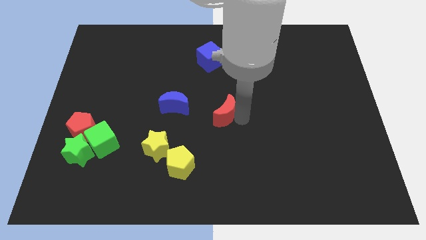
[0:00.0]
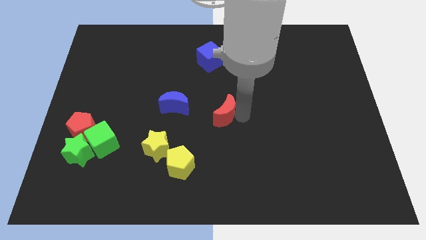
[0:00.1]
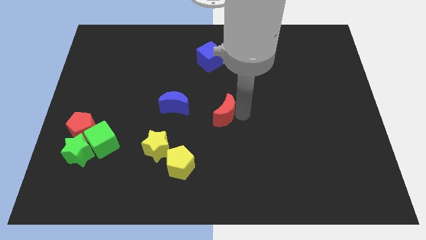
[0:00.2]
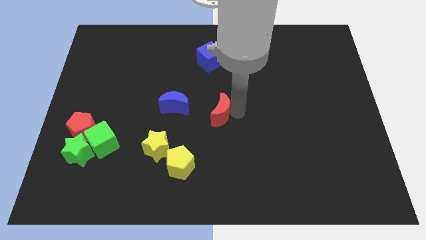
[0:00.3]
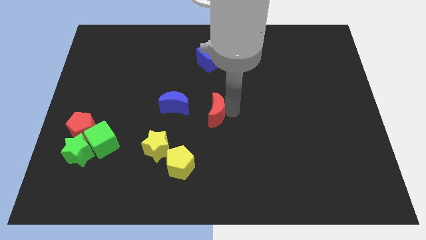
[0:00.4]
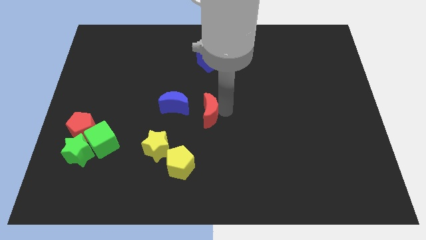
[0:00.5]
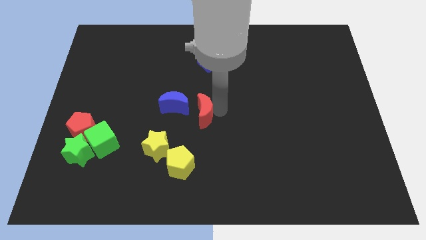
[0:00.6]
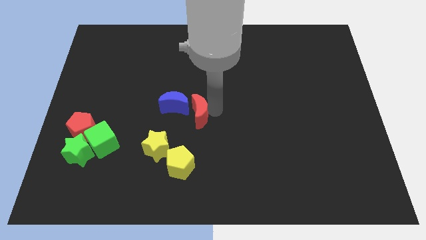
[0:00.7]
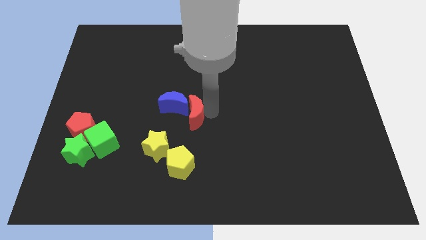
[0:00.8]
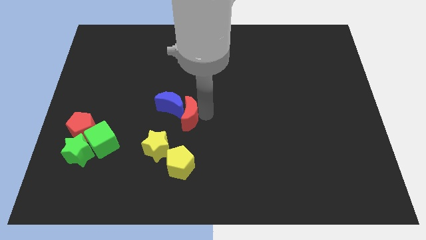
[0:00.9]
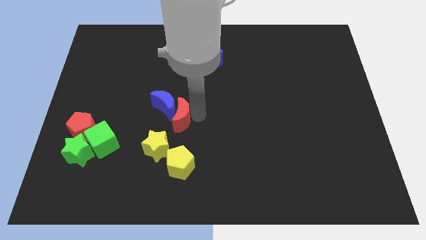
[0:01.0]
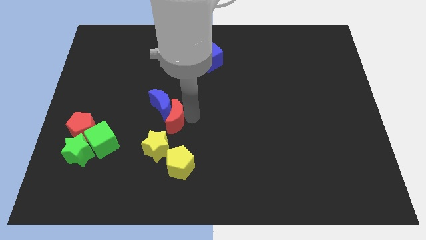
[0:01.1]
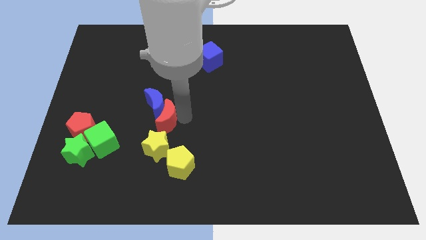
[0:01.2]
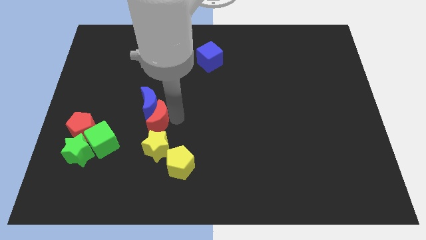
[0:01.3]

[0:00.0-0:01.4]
push the red crescent into the bottom of the blue crescent

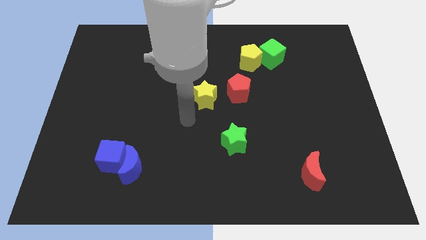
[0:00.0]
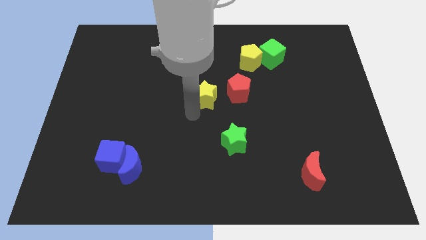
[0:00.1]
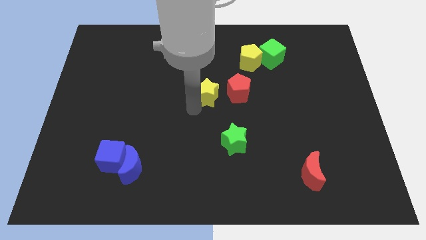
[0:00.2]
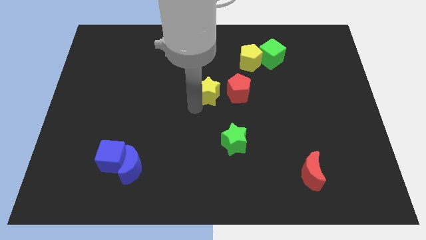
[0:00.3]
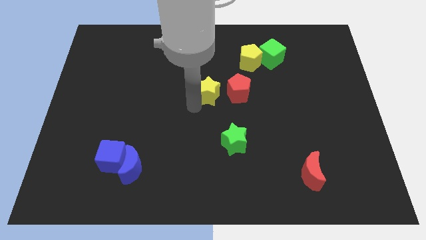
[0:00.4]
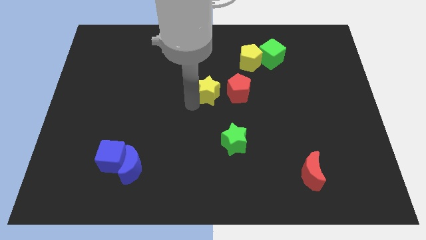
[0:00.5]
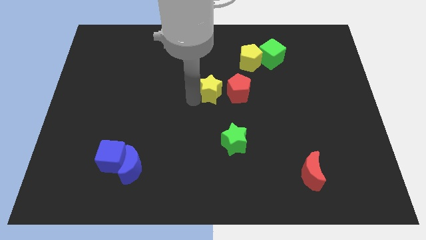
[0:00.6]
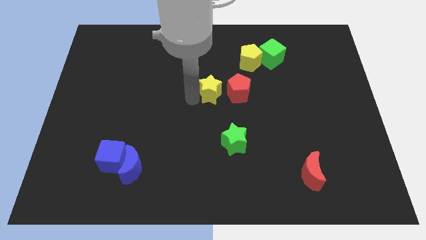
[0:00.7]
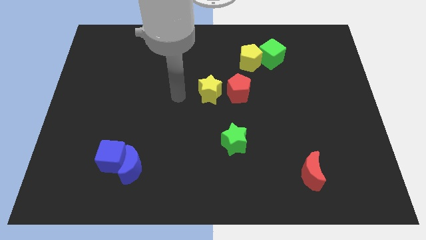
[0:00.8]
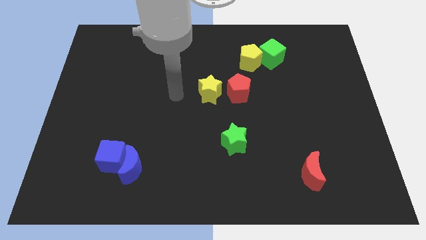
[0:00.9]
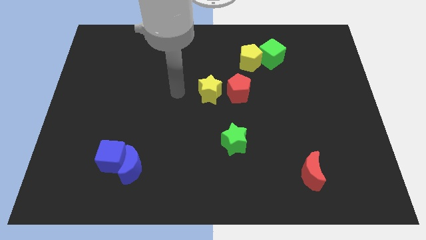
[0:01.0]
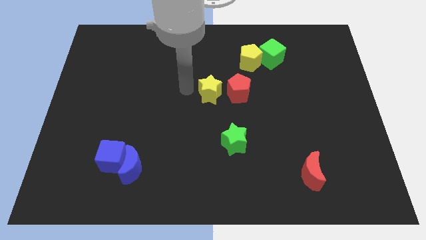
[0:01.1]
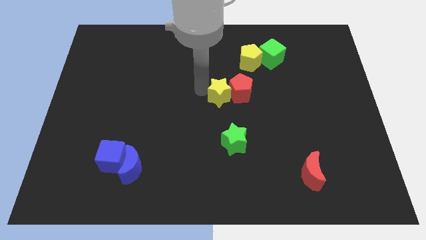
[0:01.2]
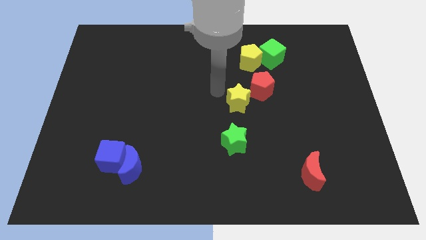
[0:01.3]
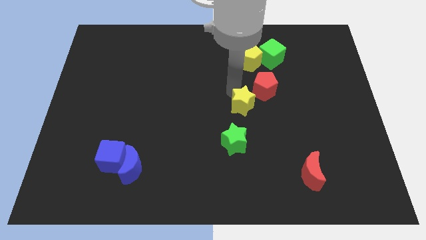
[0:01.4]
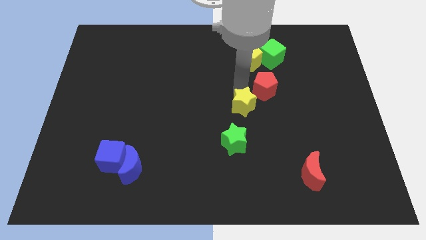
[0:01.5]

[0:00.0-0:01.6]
slide the yellow star to the bottom left side of the red pentagon

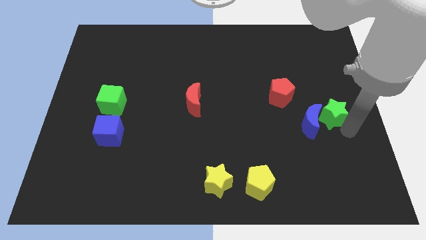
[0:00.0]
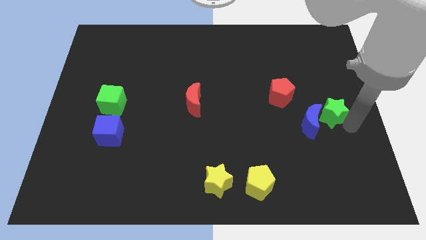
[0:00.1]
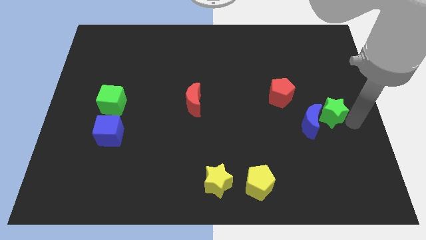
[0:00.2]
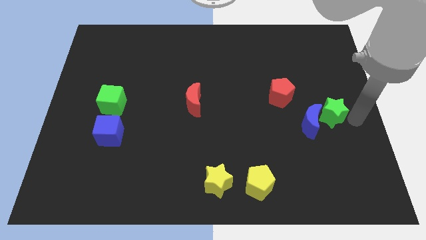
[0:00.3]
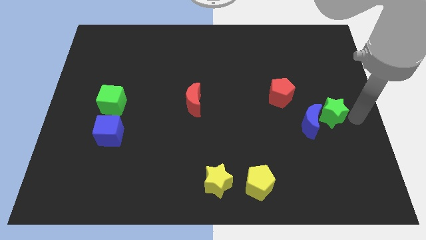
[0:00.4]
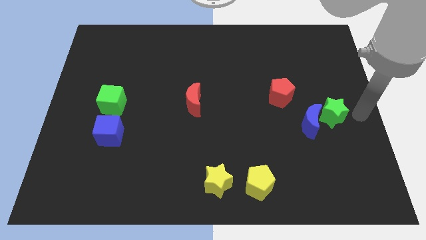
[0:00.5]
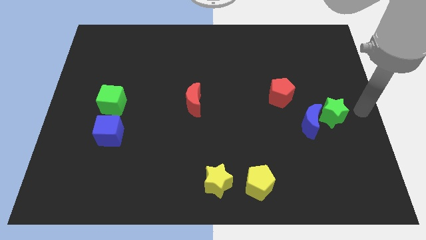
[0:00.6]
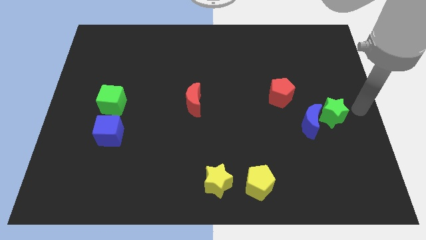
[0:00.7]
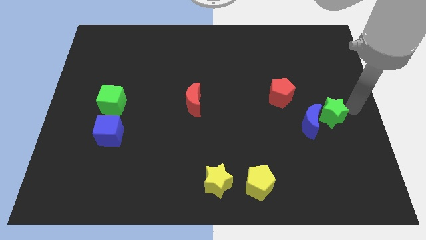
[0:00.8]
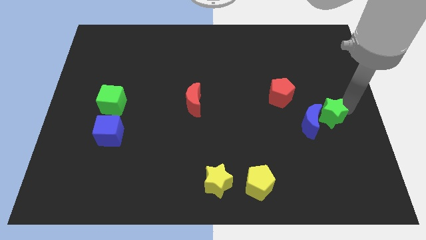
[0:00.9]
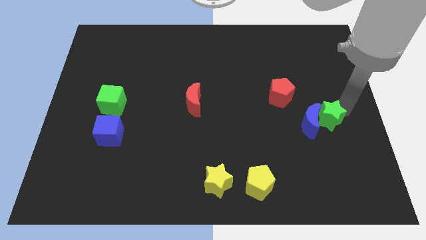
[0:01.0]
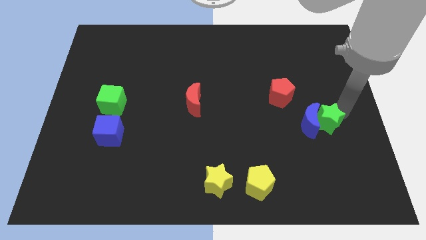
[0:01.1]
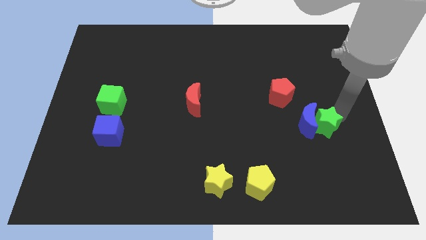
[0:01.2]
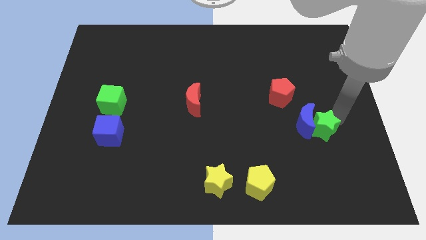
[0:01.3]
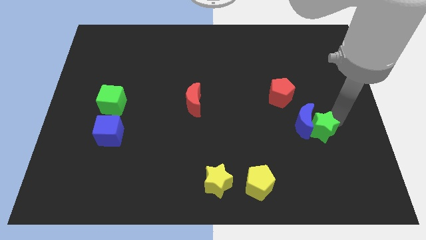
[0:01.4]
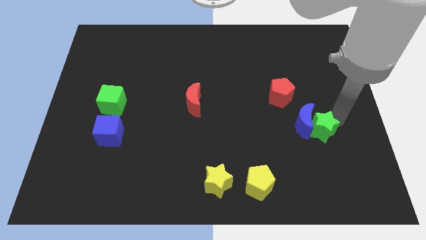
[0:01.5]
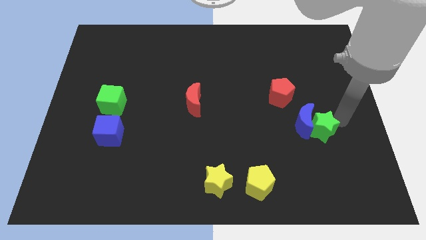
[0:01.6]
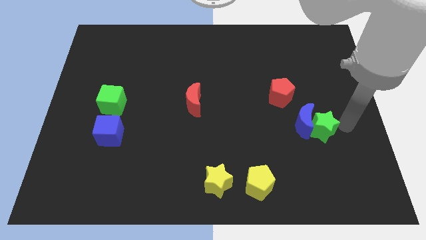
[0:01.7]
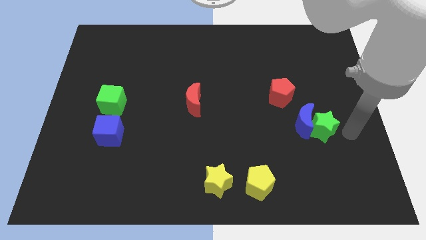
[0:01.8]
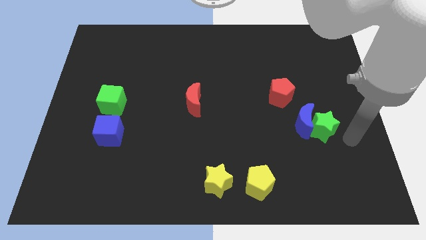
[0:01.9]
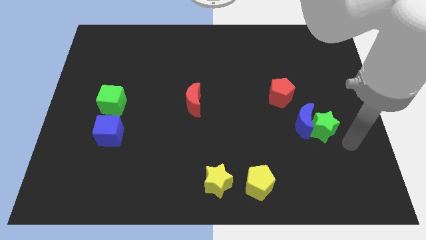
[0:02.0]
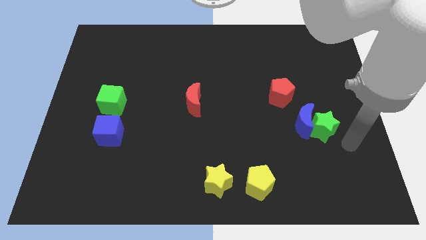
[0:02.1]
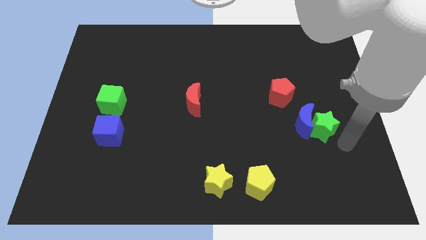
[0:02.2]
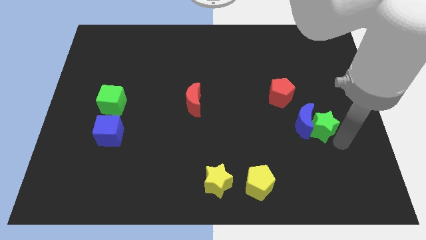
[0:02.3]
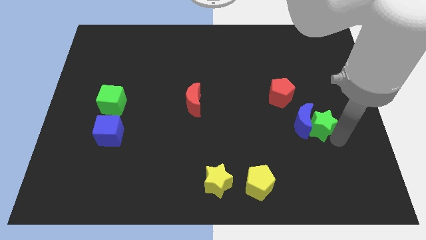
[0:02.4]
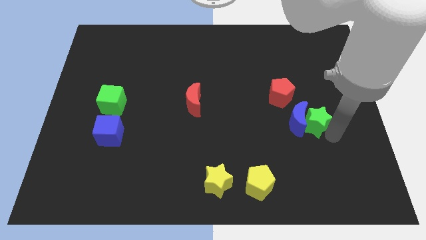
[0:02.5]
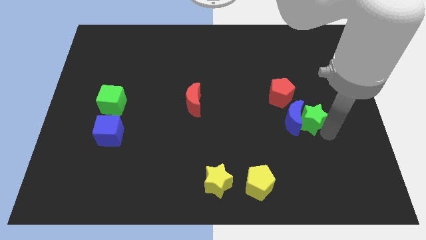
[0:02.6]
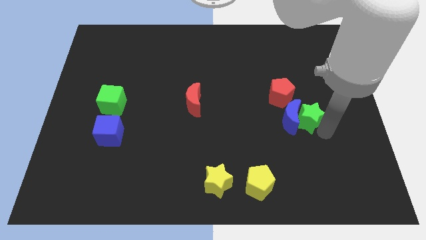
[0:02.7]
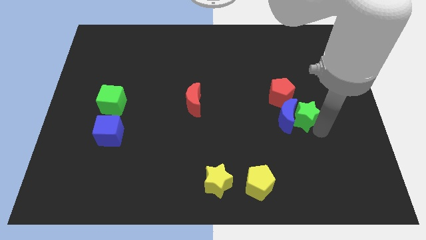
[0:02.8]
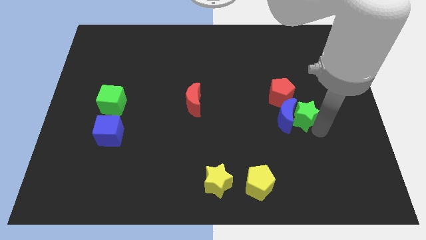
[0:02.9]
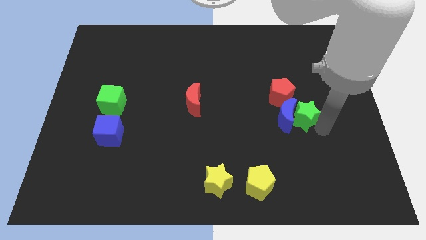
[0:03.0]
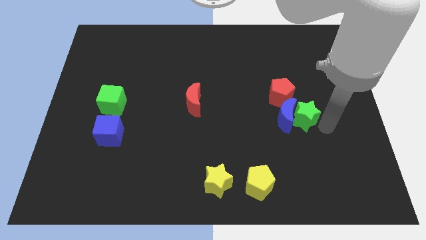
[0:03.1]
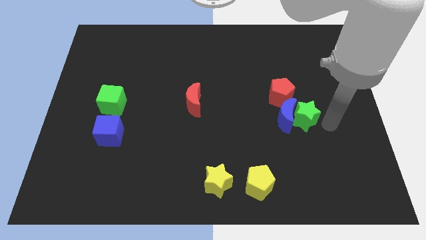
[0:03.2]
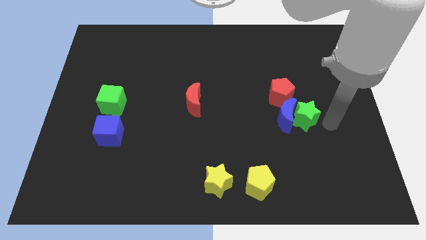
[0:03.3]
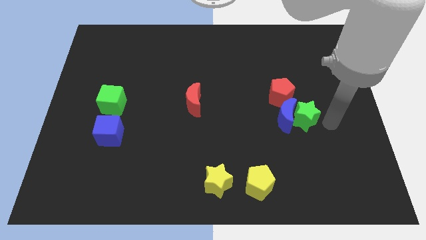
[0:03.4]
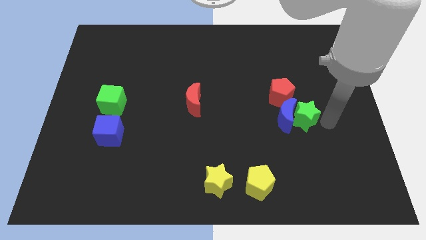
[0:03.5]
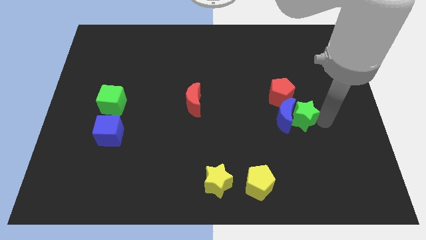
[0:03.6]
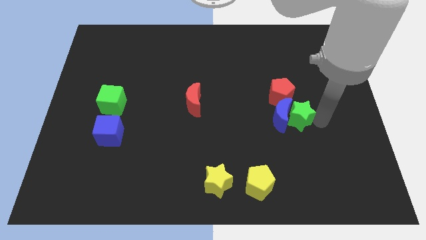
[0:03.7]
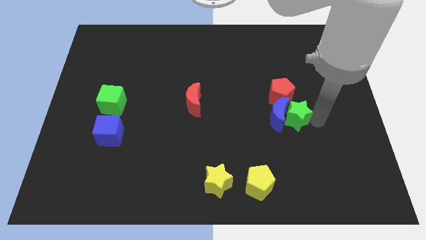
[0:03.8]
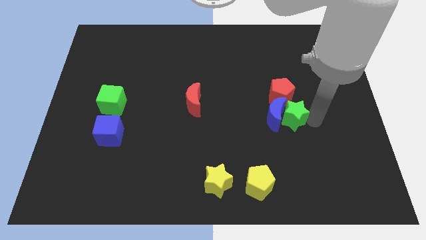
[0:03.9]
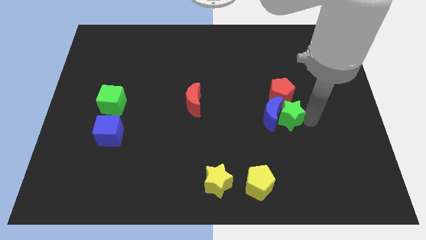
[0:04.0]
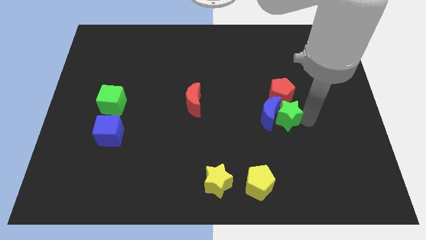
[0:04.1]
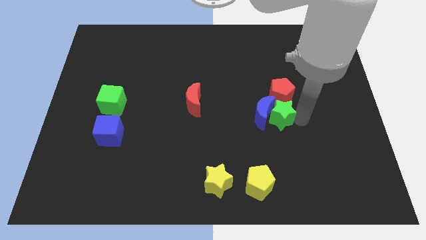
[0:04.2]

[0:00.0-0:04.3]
push the green star into the blue crescent

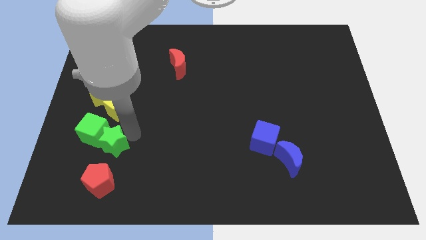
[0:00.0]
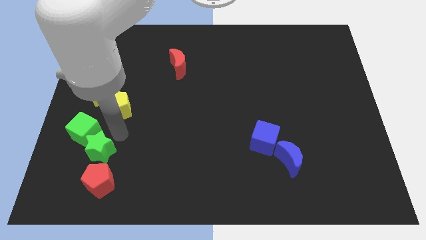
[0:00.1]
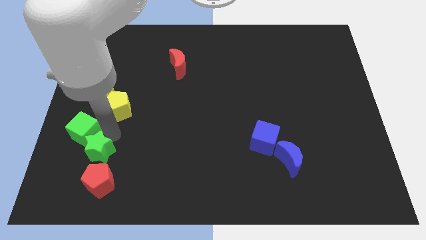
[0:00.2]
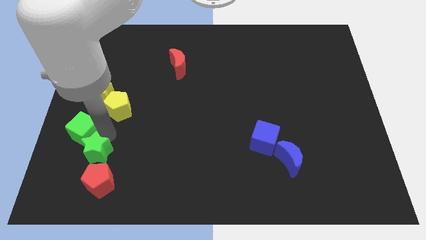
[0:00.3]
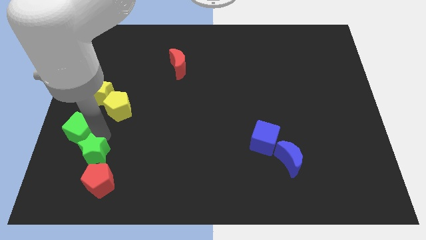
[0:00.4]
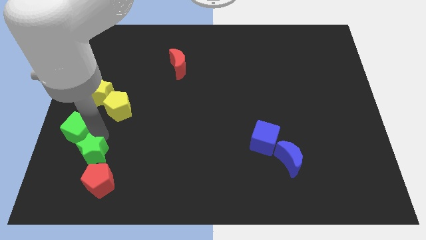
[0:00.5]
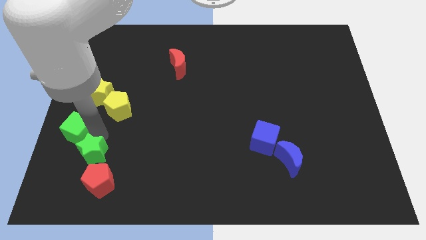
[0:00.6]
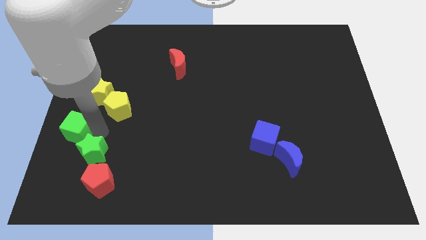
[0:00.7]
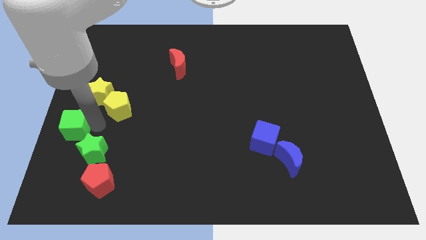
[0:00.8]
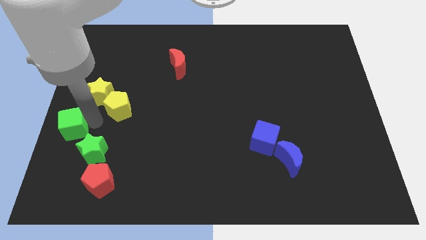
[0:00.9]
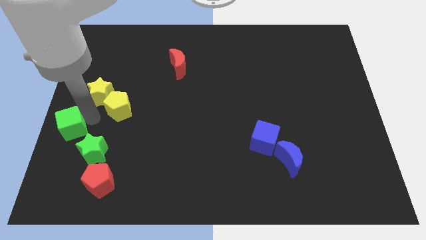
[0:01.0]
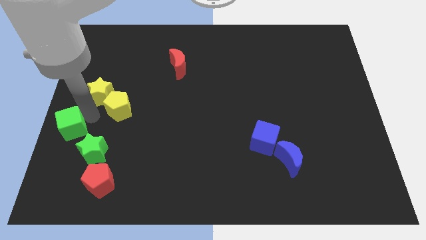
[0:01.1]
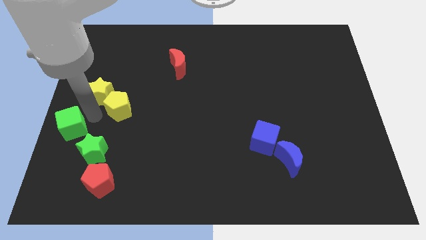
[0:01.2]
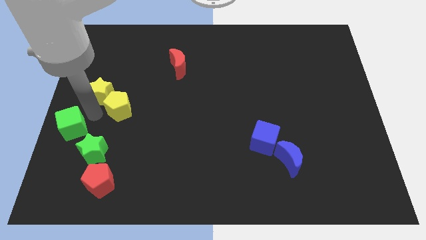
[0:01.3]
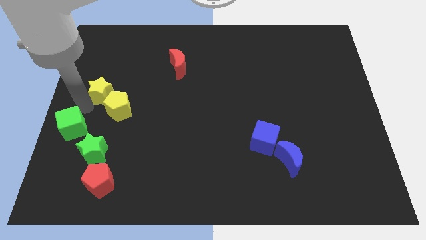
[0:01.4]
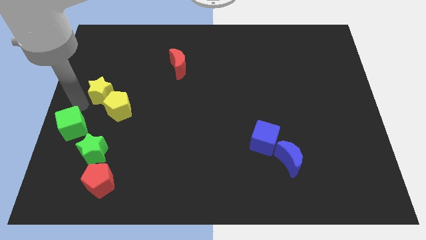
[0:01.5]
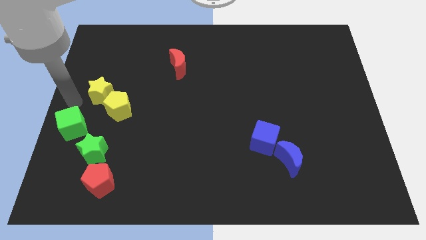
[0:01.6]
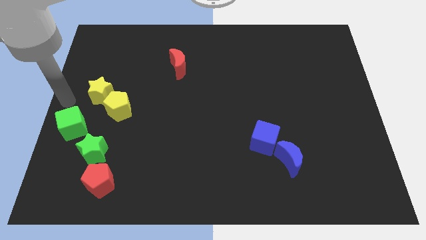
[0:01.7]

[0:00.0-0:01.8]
separate the green star and green cube
